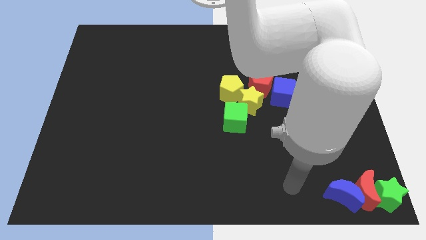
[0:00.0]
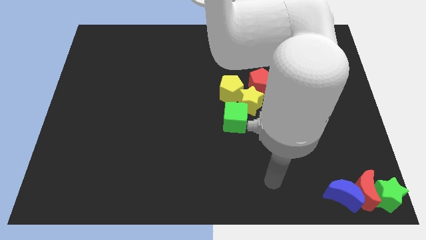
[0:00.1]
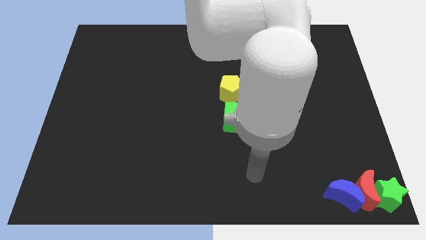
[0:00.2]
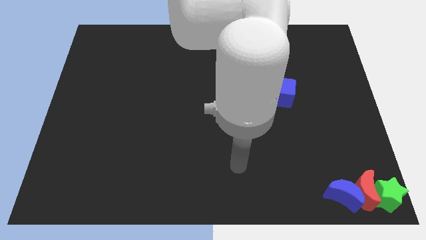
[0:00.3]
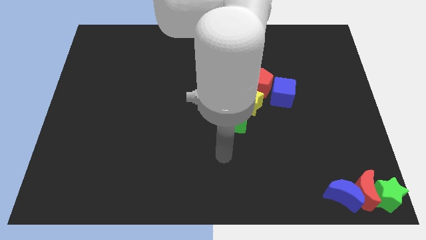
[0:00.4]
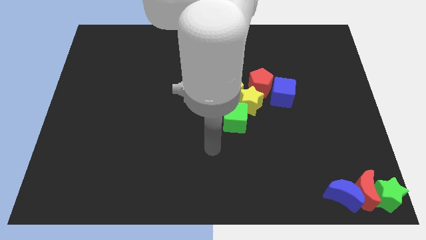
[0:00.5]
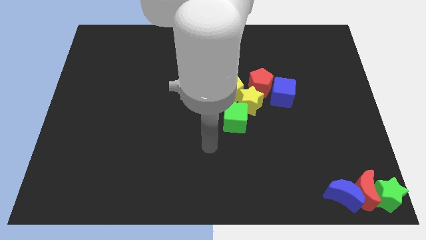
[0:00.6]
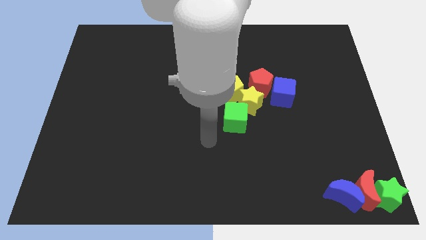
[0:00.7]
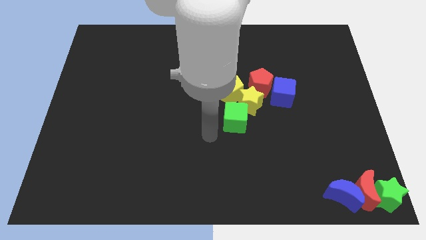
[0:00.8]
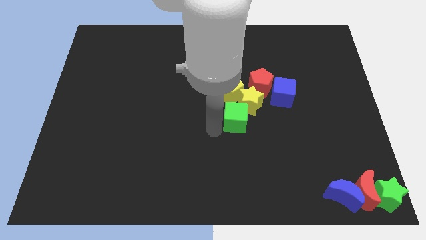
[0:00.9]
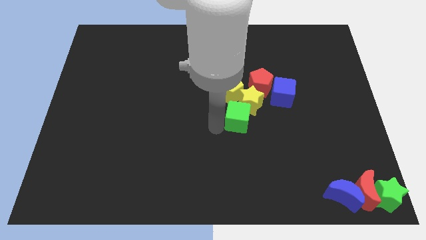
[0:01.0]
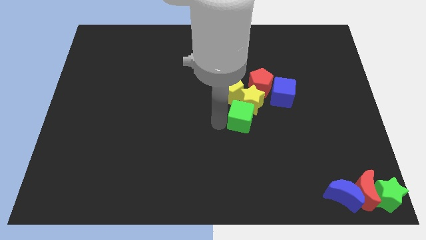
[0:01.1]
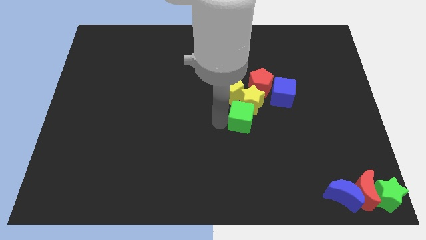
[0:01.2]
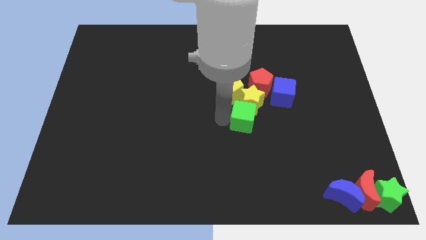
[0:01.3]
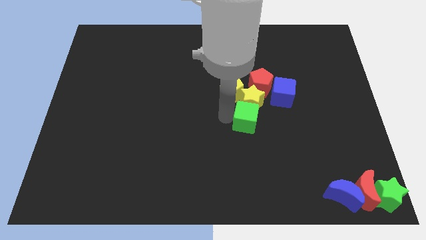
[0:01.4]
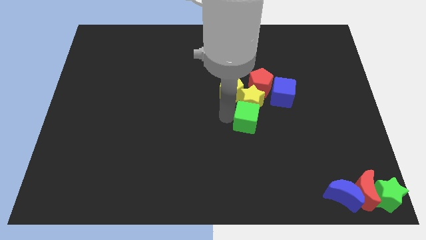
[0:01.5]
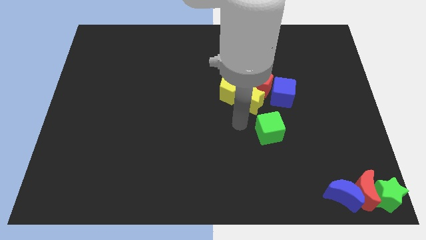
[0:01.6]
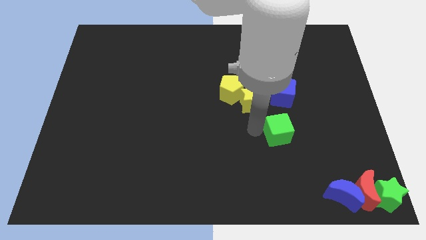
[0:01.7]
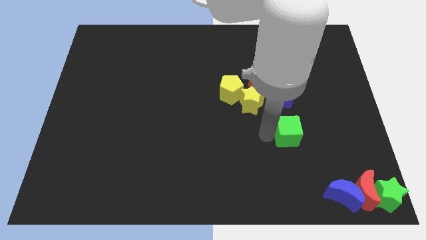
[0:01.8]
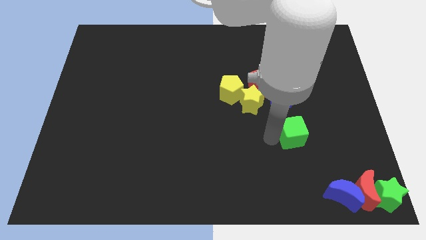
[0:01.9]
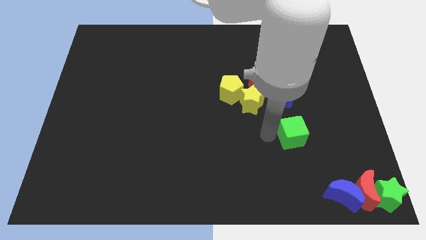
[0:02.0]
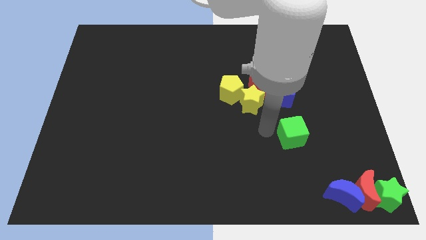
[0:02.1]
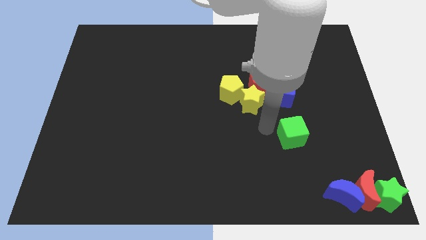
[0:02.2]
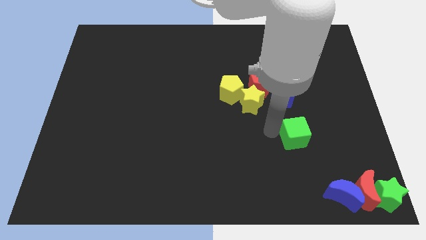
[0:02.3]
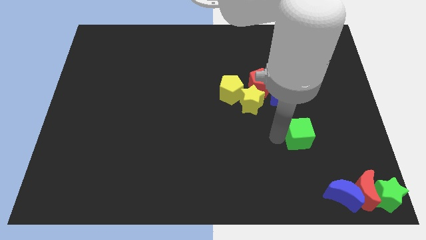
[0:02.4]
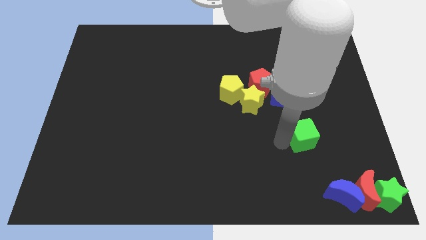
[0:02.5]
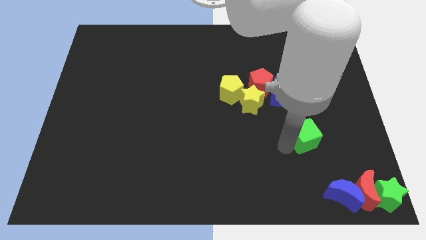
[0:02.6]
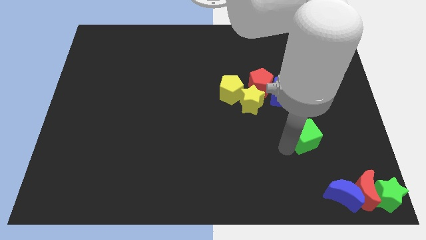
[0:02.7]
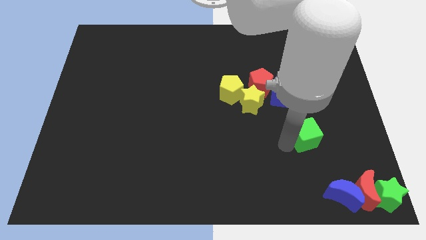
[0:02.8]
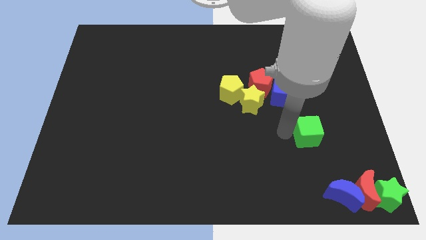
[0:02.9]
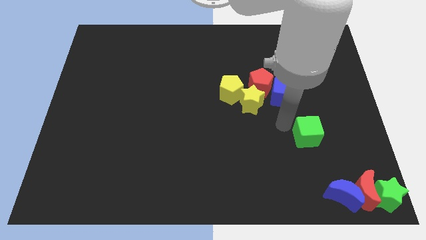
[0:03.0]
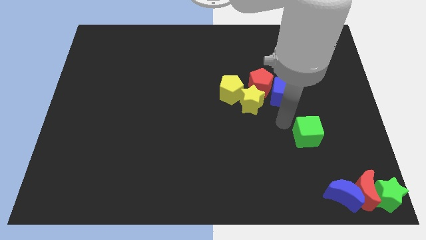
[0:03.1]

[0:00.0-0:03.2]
separate the green cube from the yellow star

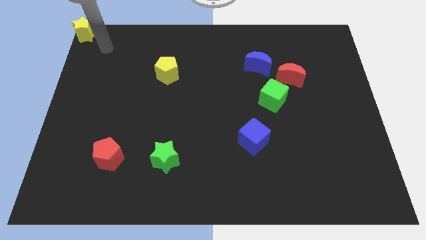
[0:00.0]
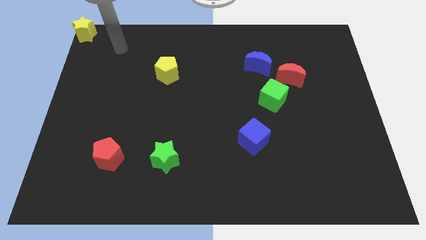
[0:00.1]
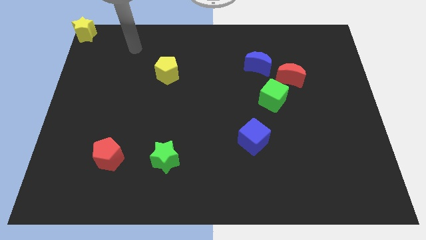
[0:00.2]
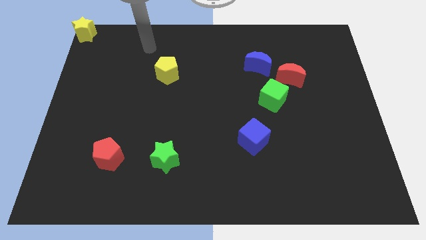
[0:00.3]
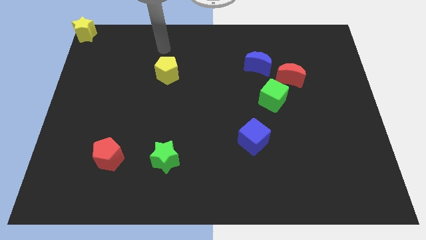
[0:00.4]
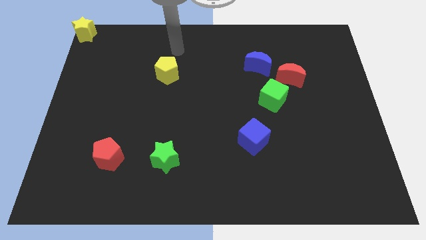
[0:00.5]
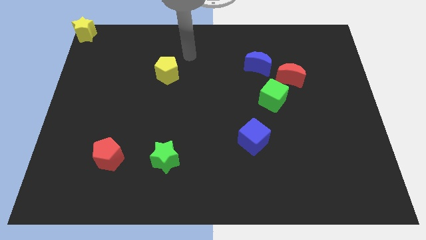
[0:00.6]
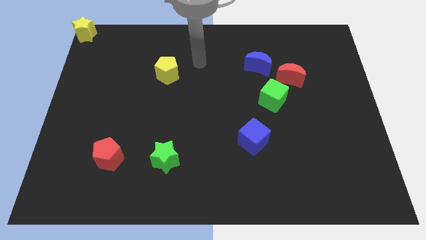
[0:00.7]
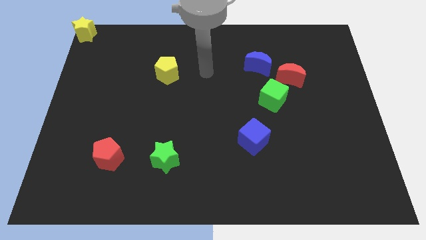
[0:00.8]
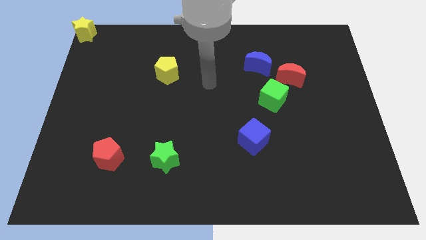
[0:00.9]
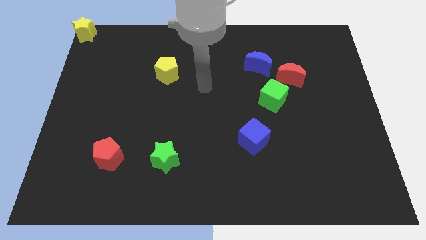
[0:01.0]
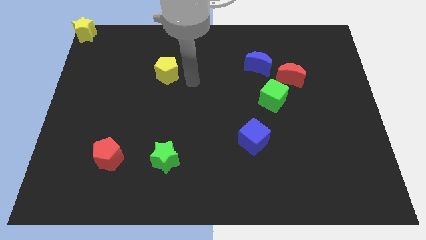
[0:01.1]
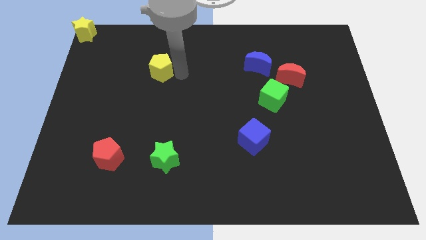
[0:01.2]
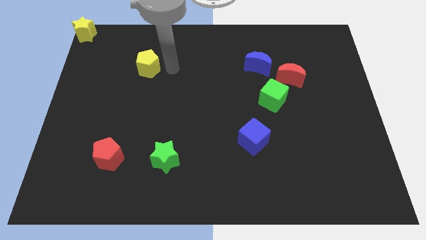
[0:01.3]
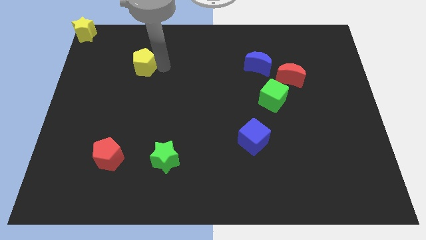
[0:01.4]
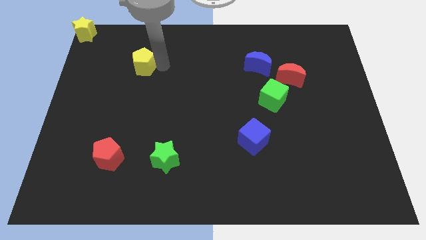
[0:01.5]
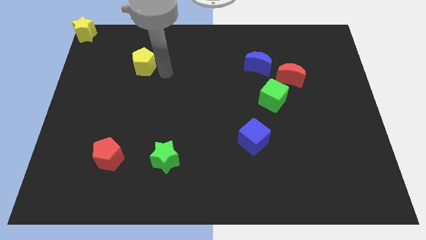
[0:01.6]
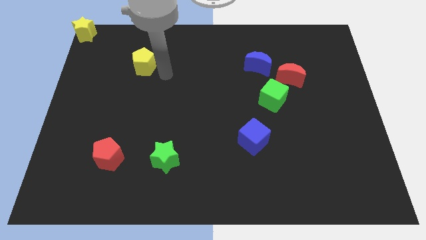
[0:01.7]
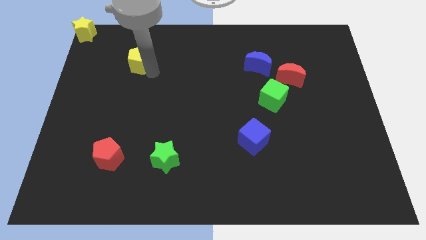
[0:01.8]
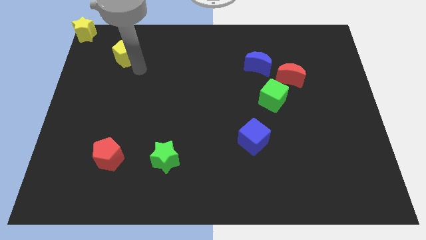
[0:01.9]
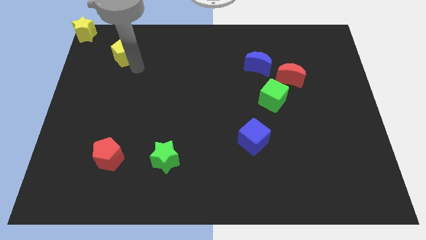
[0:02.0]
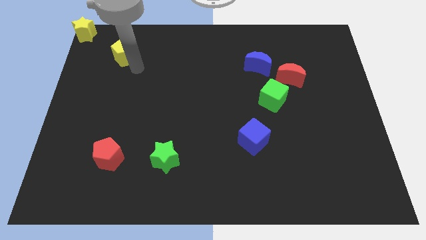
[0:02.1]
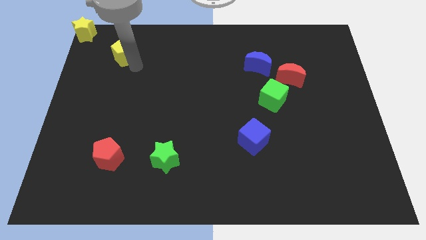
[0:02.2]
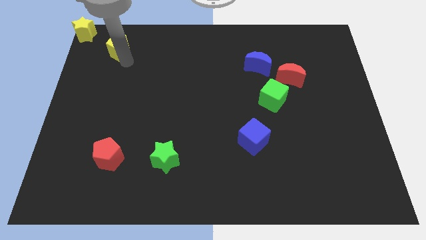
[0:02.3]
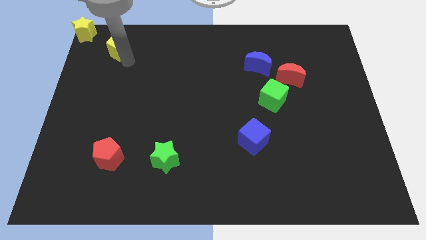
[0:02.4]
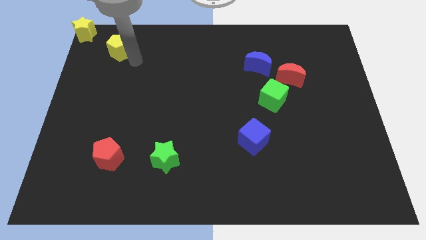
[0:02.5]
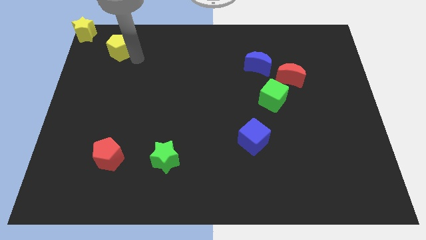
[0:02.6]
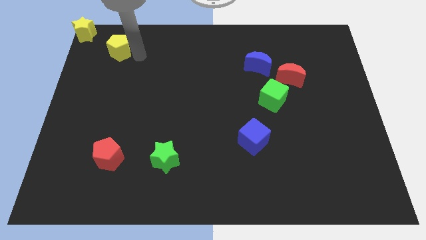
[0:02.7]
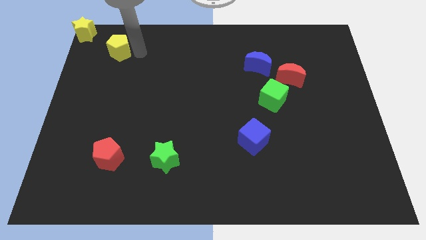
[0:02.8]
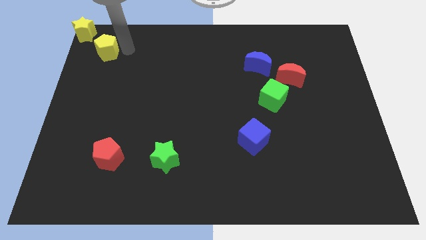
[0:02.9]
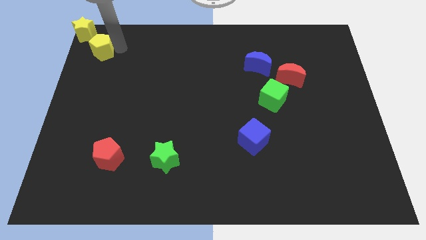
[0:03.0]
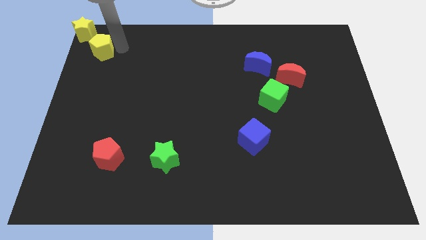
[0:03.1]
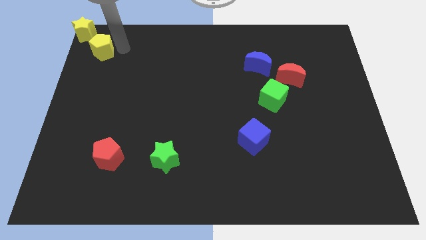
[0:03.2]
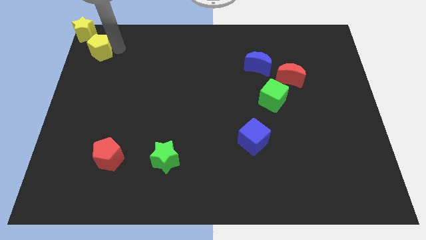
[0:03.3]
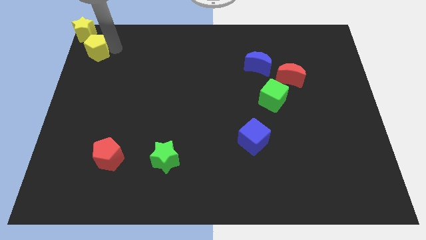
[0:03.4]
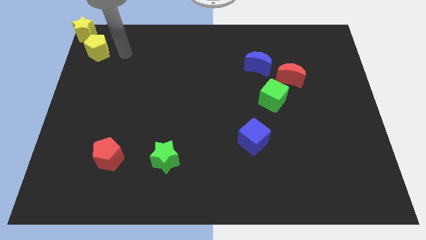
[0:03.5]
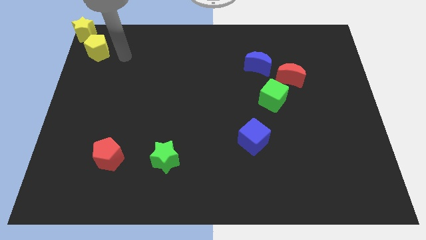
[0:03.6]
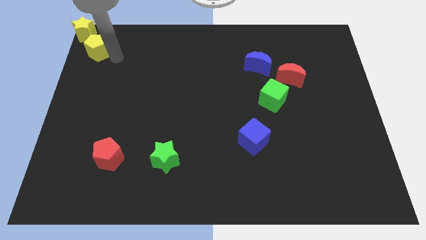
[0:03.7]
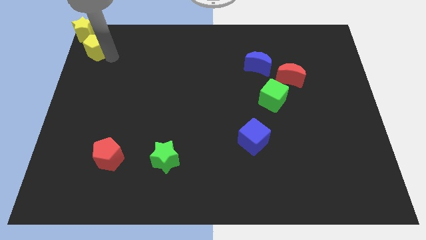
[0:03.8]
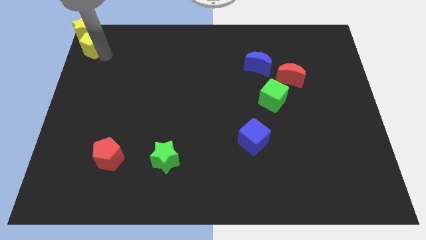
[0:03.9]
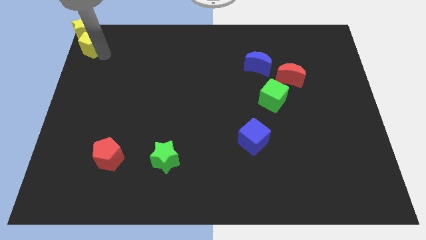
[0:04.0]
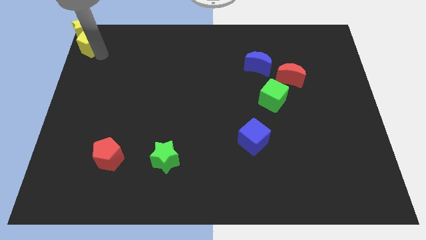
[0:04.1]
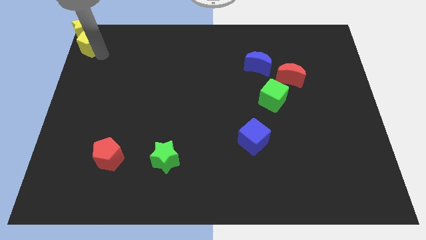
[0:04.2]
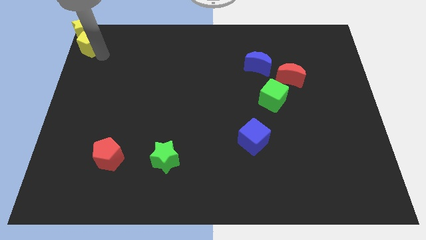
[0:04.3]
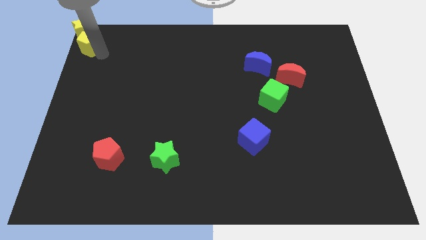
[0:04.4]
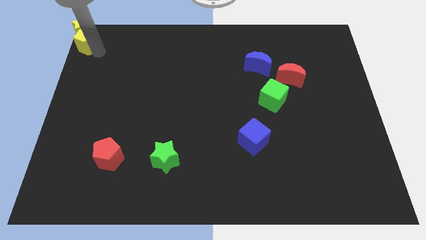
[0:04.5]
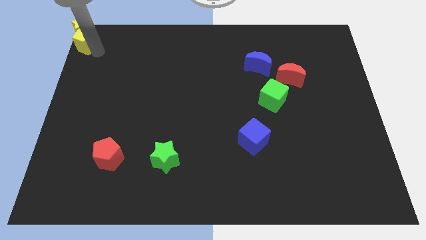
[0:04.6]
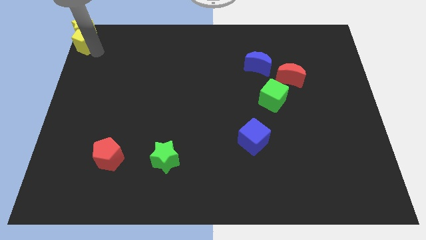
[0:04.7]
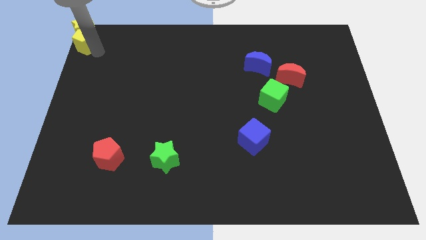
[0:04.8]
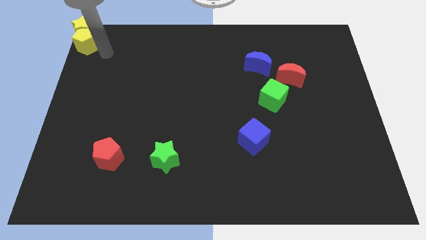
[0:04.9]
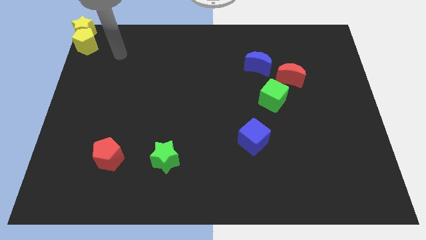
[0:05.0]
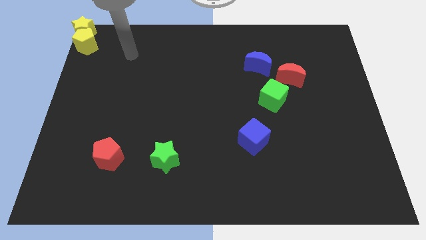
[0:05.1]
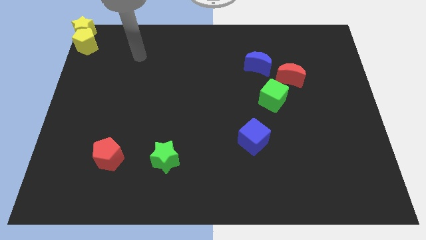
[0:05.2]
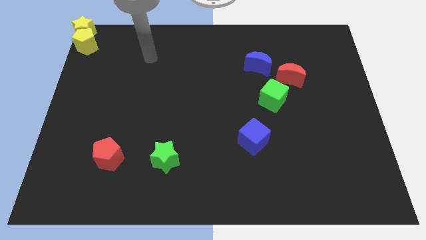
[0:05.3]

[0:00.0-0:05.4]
place the yellow pentagon below the star

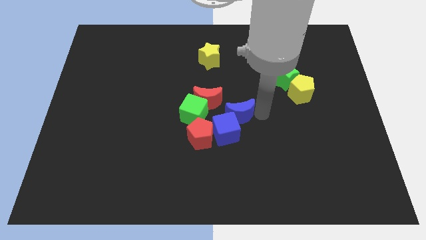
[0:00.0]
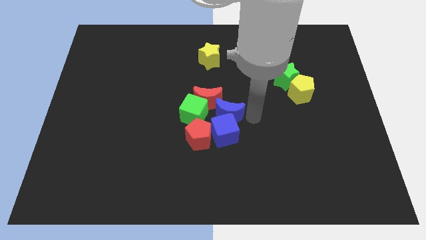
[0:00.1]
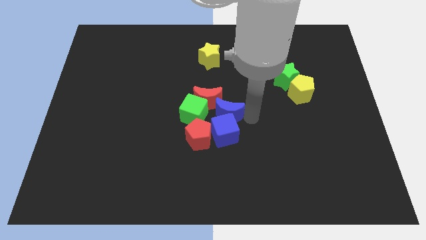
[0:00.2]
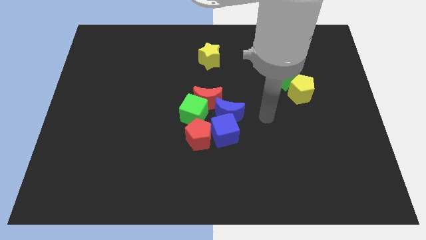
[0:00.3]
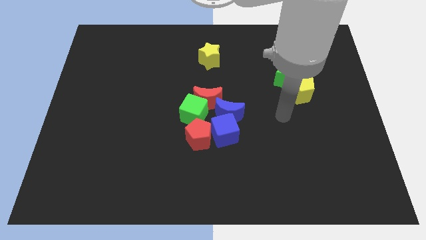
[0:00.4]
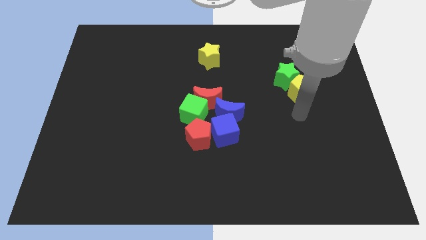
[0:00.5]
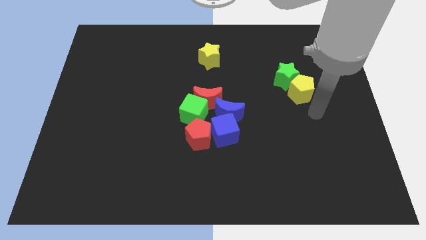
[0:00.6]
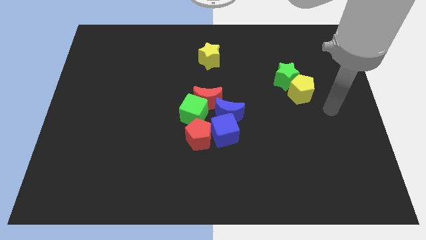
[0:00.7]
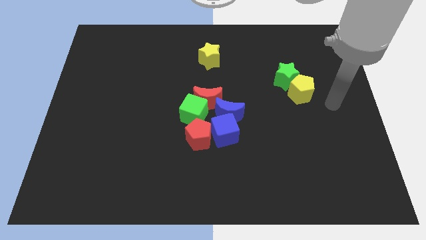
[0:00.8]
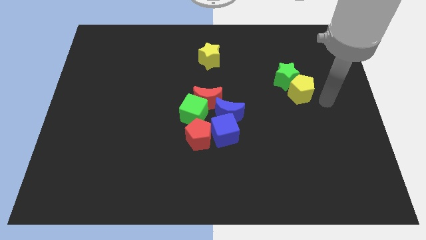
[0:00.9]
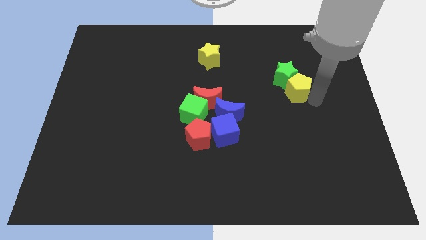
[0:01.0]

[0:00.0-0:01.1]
move your arm to the right of yellow pentagon
